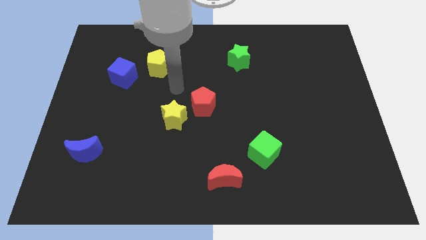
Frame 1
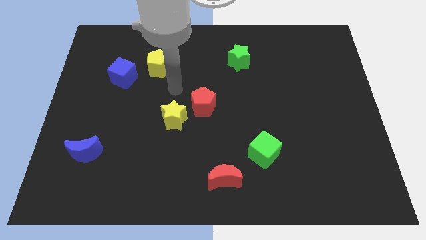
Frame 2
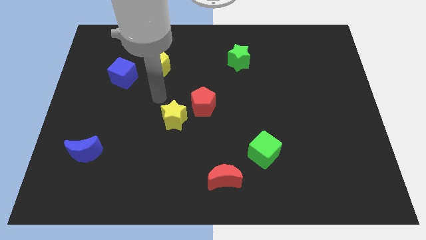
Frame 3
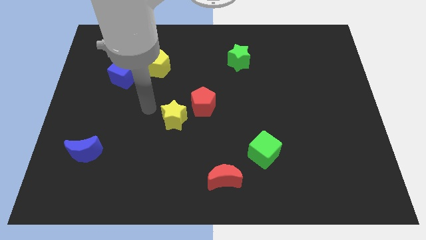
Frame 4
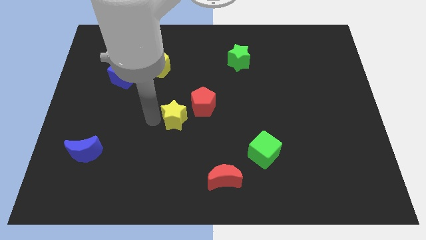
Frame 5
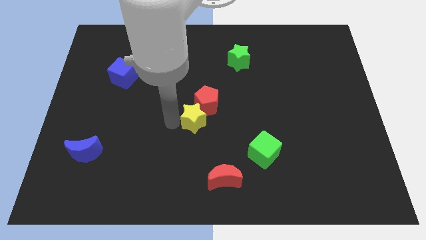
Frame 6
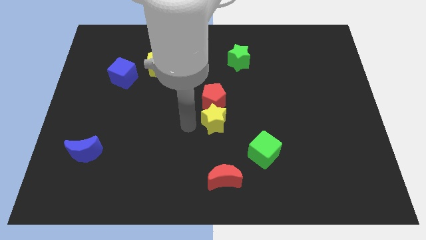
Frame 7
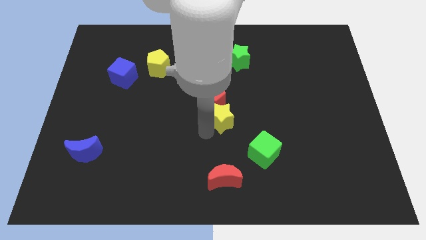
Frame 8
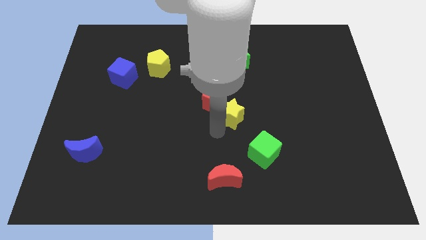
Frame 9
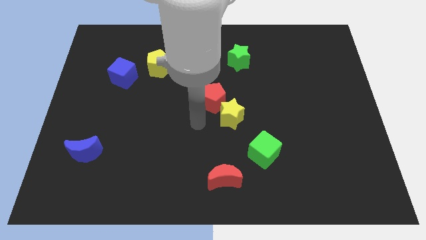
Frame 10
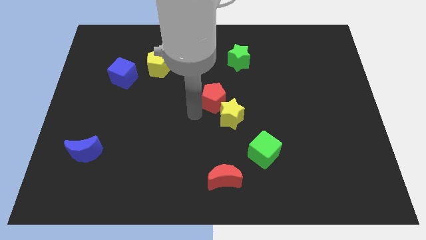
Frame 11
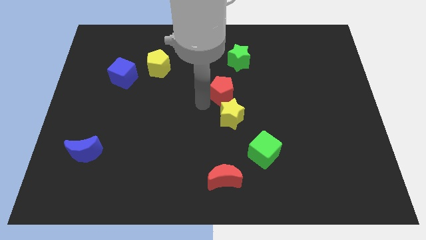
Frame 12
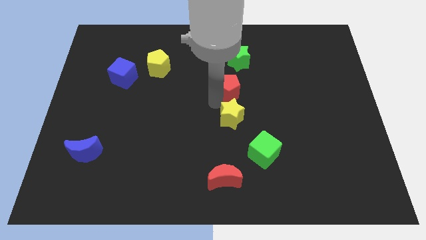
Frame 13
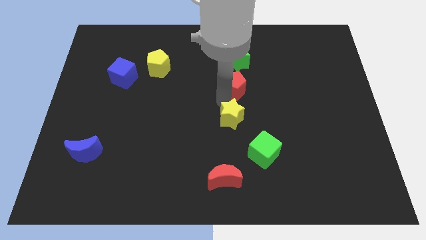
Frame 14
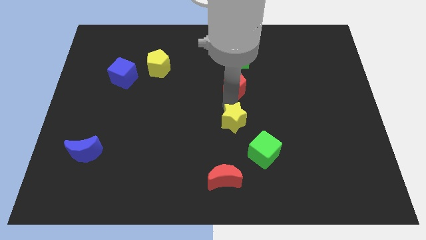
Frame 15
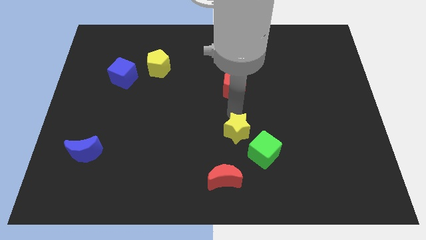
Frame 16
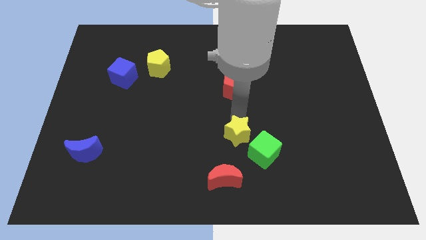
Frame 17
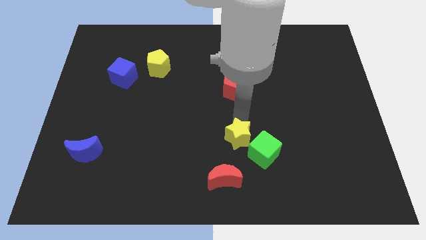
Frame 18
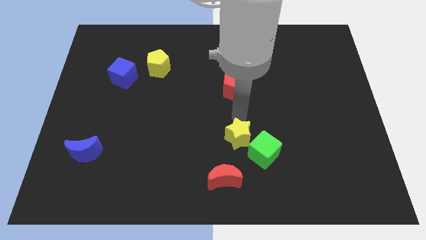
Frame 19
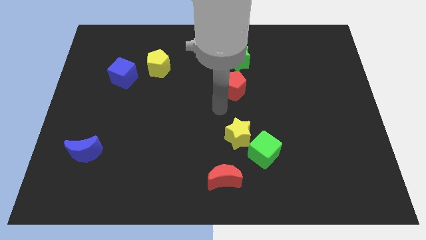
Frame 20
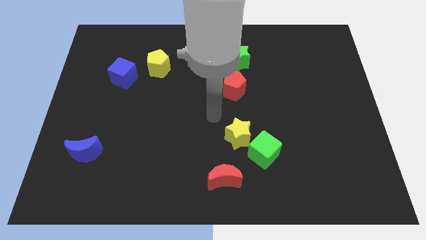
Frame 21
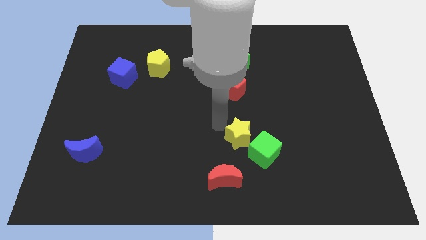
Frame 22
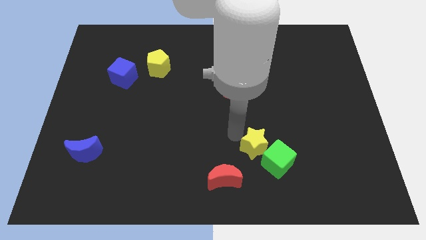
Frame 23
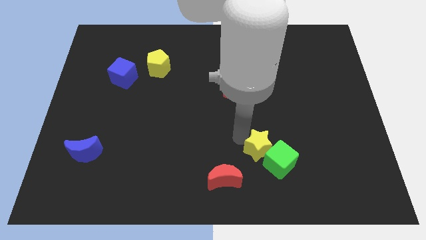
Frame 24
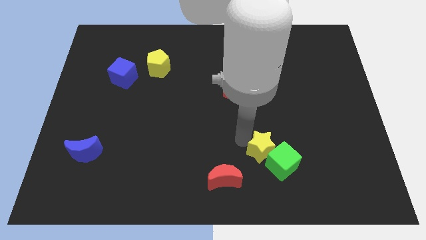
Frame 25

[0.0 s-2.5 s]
move the yellow star to the green cube

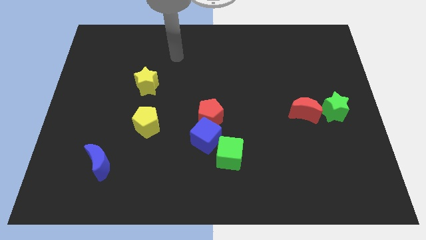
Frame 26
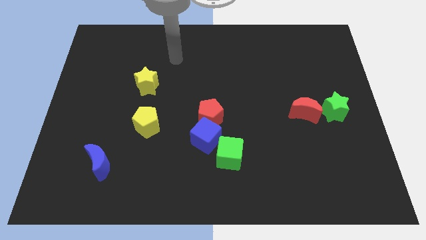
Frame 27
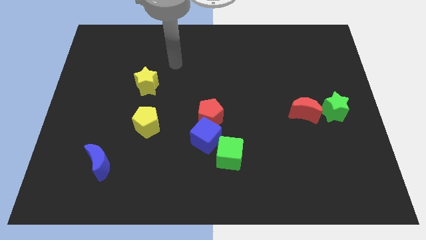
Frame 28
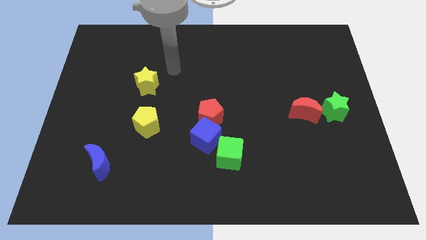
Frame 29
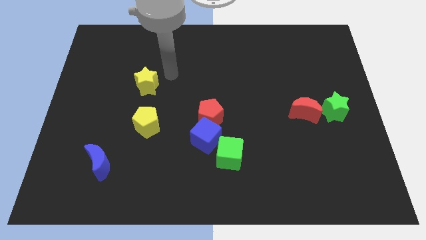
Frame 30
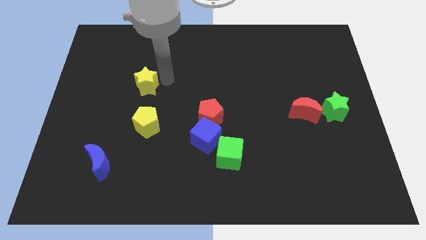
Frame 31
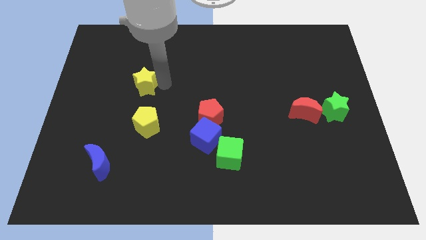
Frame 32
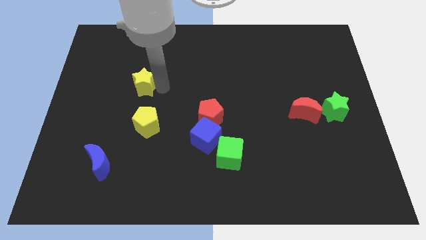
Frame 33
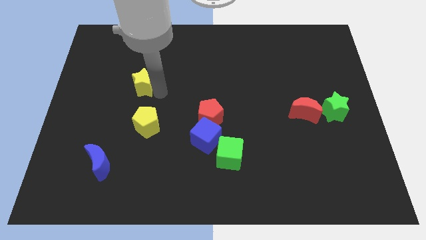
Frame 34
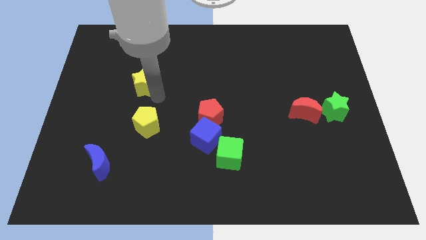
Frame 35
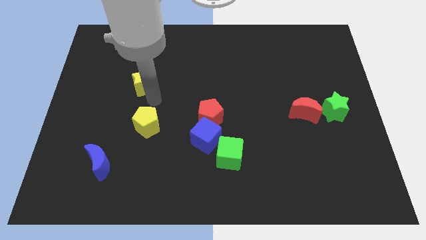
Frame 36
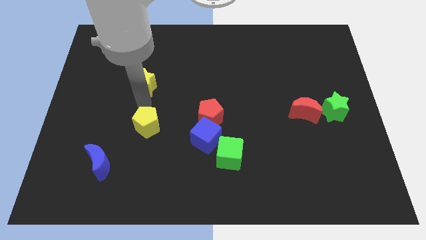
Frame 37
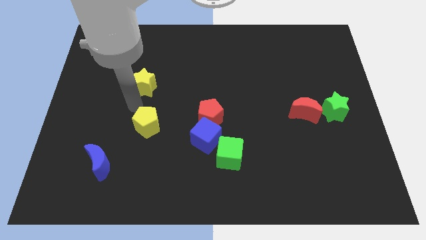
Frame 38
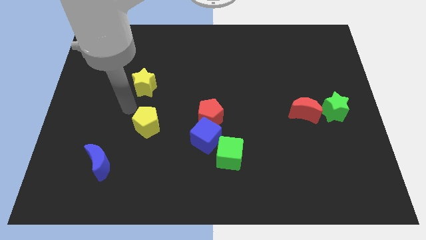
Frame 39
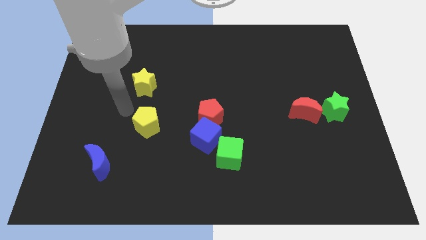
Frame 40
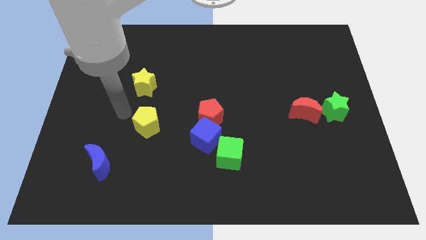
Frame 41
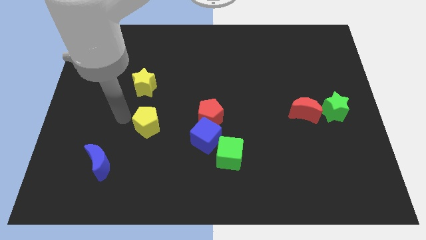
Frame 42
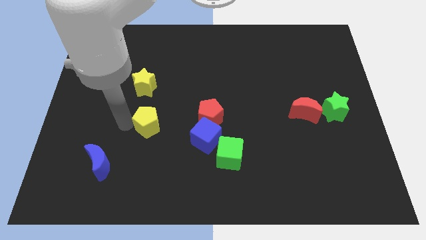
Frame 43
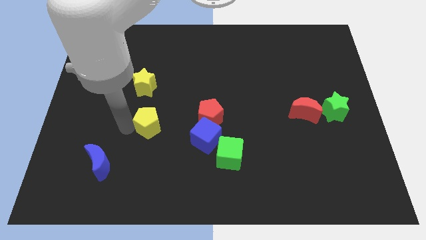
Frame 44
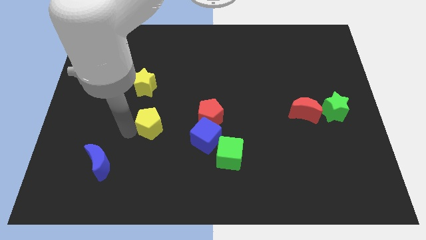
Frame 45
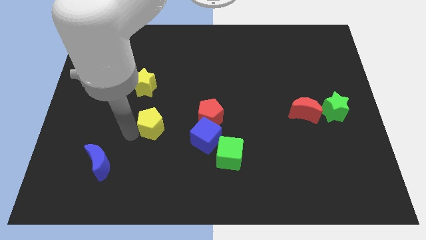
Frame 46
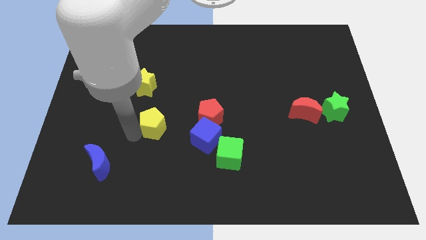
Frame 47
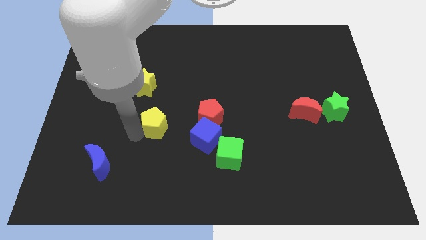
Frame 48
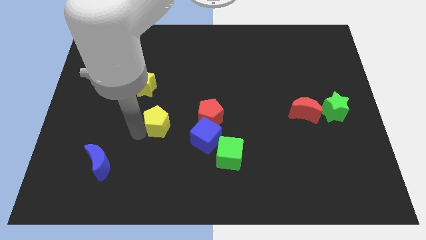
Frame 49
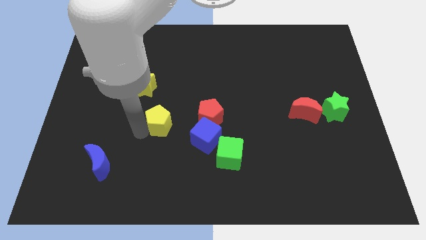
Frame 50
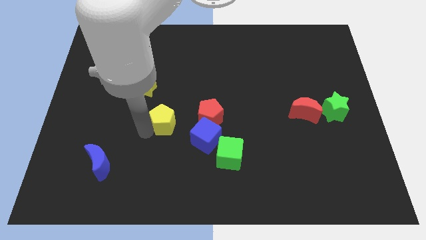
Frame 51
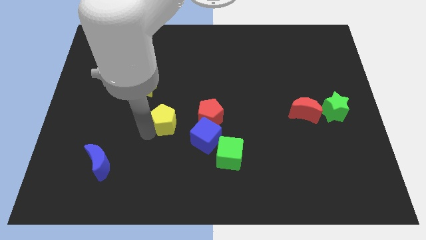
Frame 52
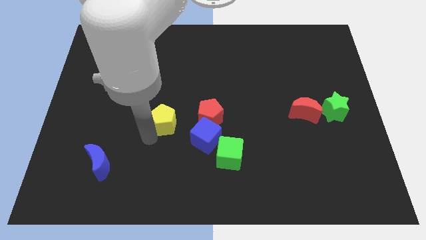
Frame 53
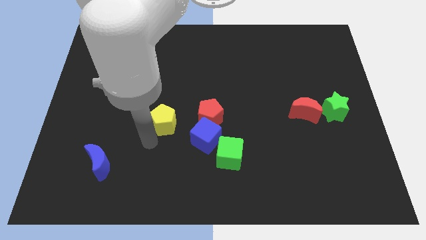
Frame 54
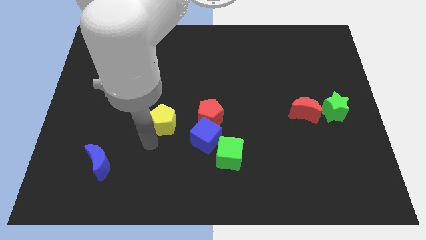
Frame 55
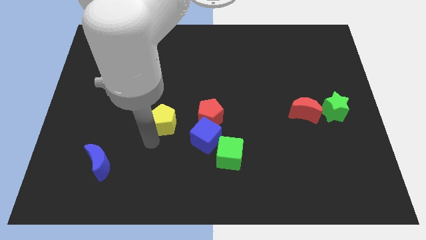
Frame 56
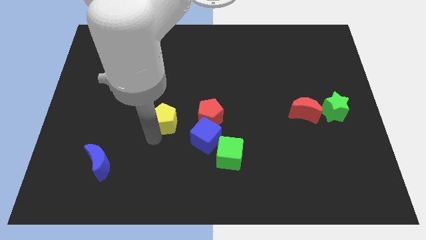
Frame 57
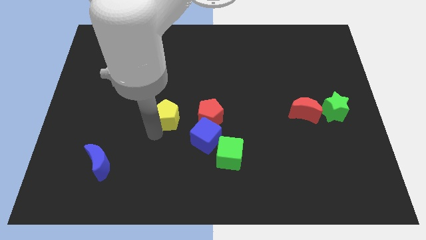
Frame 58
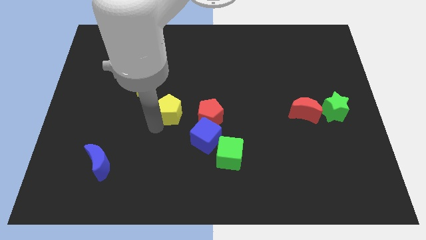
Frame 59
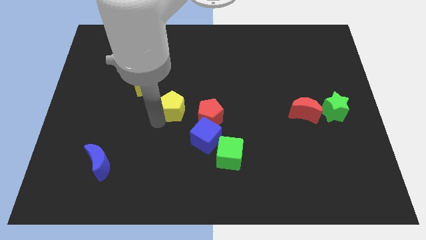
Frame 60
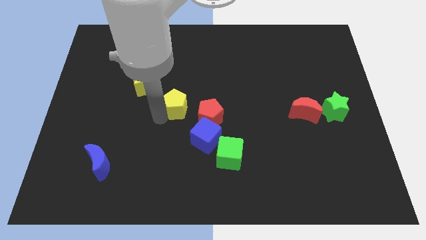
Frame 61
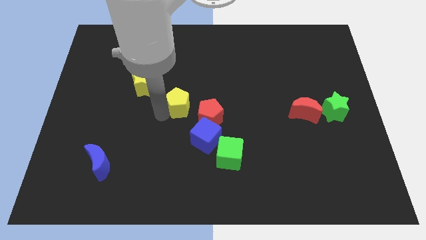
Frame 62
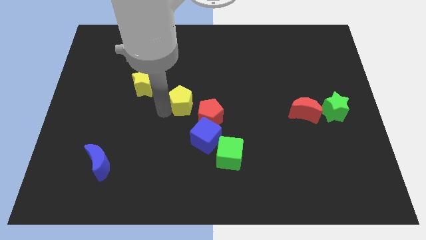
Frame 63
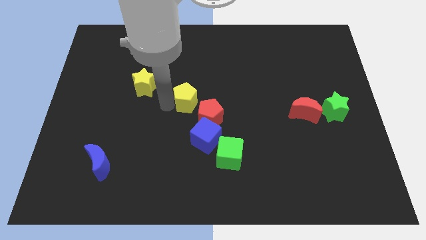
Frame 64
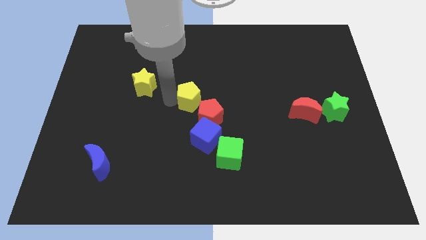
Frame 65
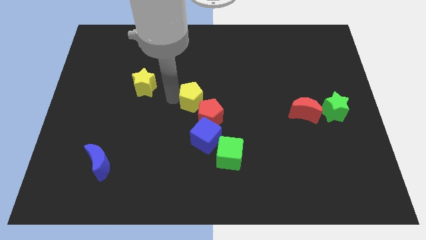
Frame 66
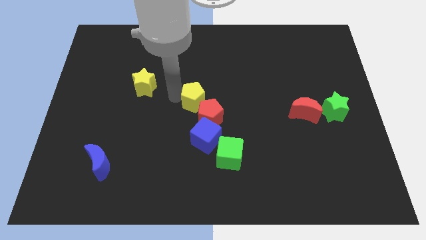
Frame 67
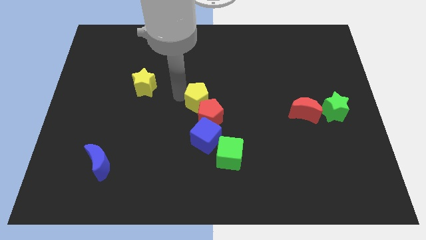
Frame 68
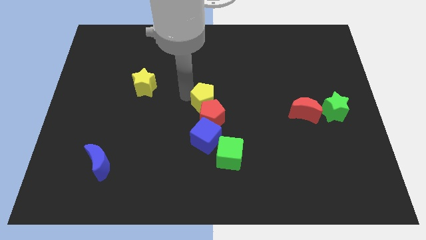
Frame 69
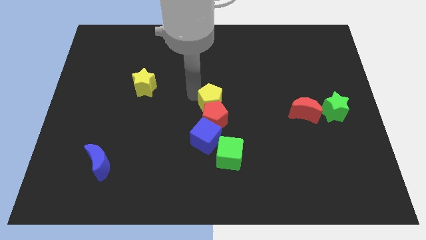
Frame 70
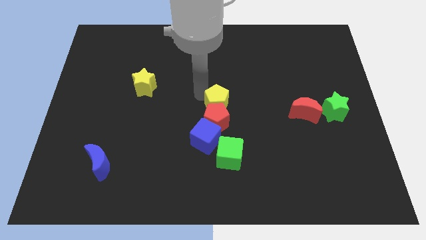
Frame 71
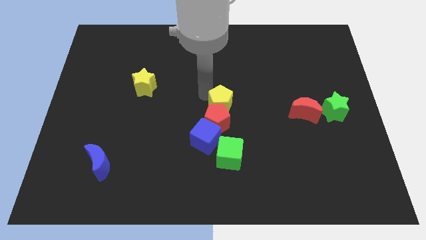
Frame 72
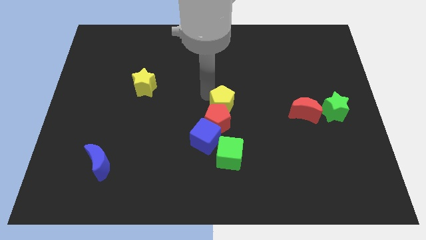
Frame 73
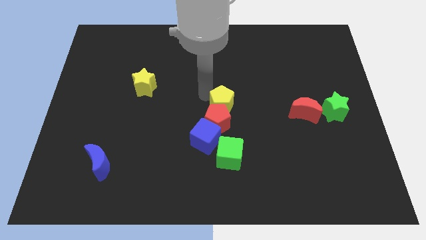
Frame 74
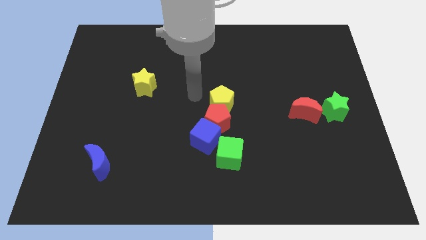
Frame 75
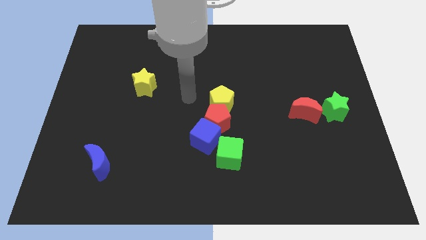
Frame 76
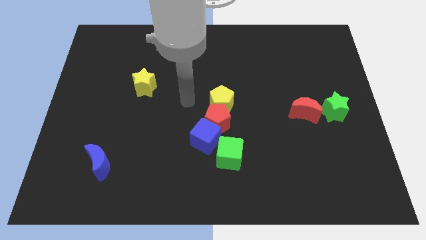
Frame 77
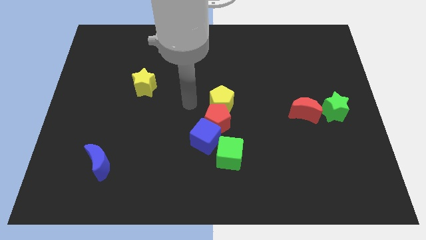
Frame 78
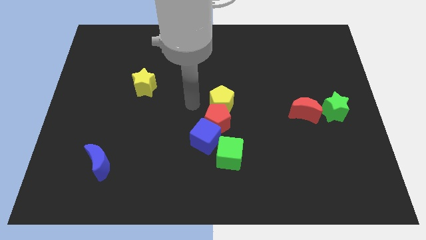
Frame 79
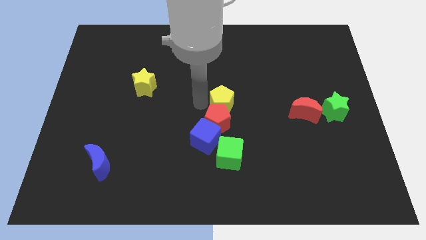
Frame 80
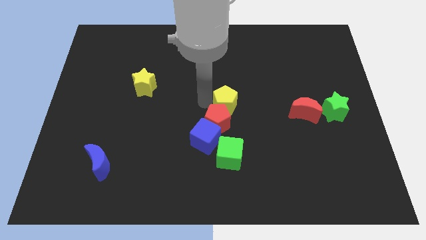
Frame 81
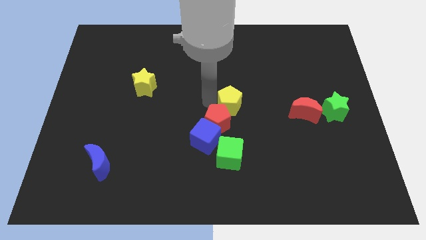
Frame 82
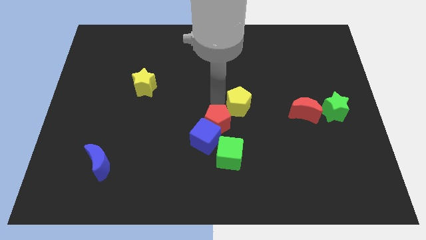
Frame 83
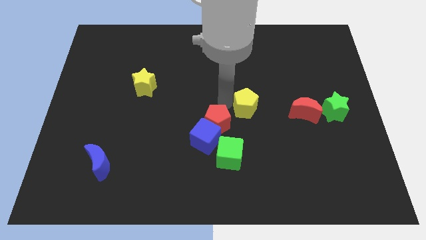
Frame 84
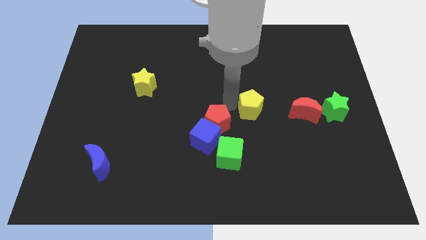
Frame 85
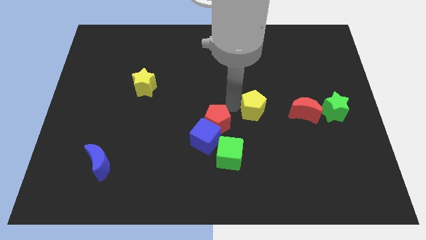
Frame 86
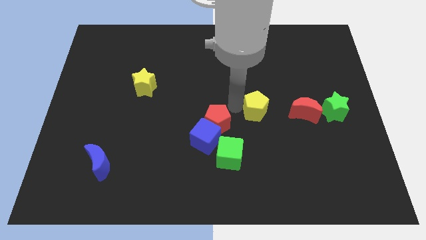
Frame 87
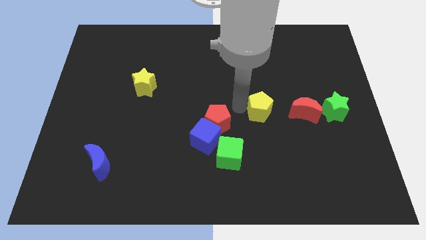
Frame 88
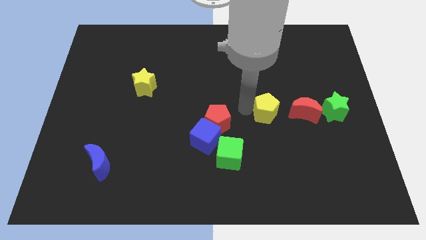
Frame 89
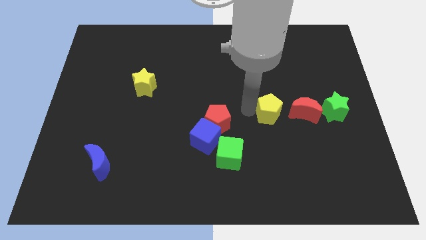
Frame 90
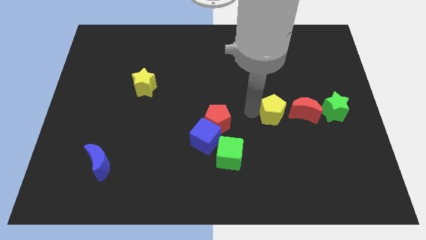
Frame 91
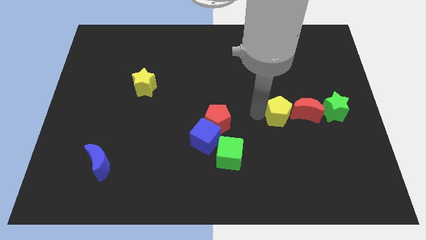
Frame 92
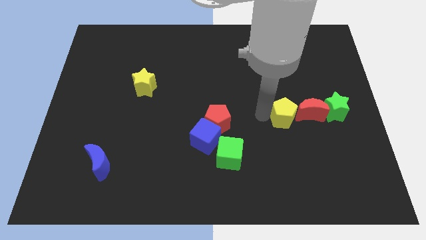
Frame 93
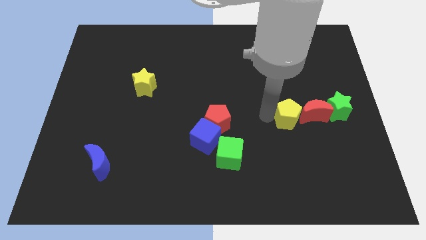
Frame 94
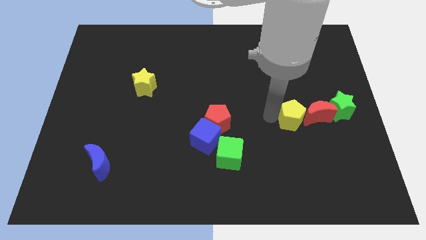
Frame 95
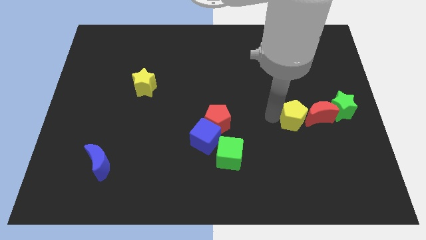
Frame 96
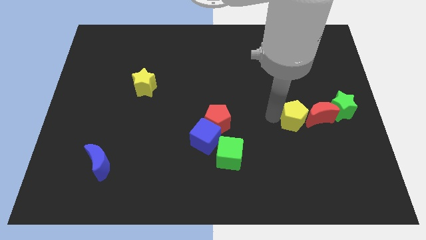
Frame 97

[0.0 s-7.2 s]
put the yellow pentagon next to the red moon
